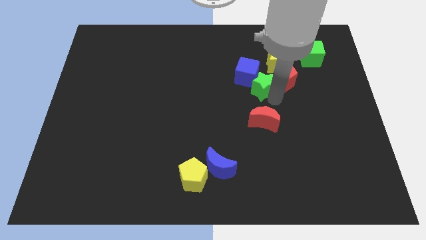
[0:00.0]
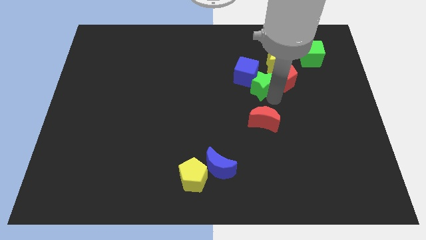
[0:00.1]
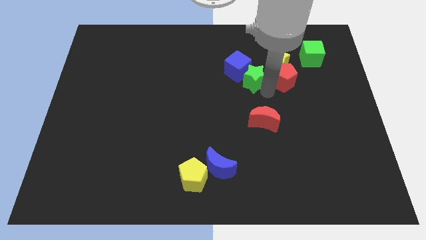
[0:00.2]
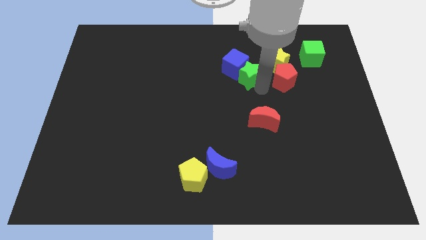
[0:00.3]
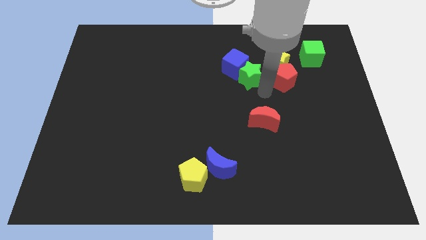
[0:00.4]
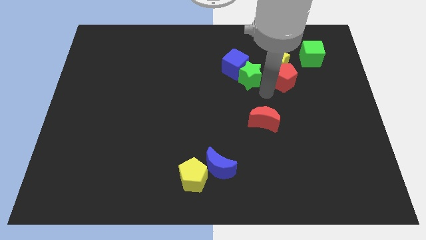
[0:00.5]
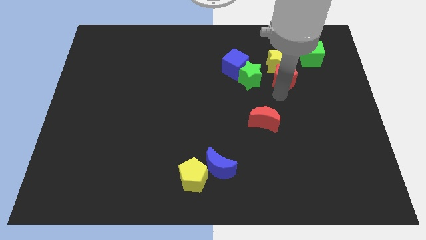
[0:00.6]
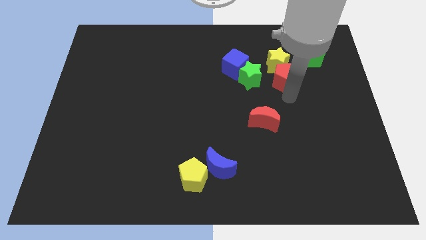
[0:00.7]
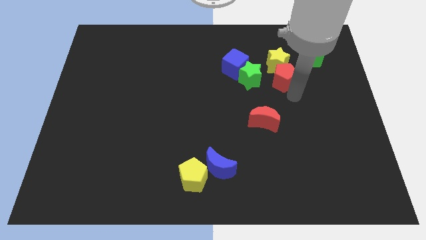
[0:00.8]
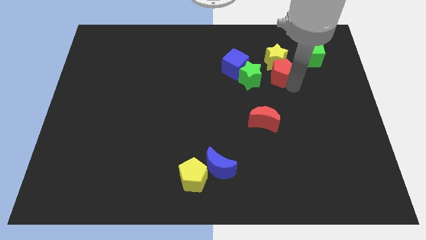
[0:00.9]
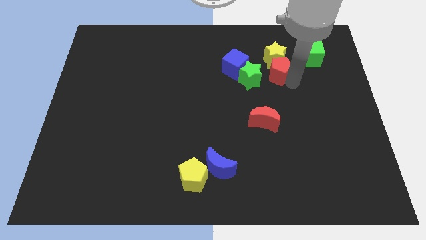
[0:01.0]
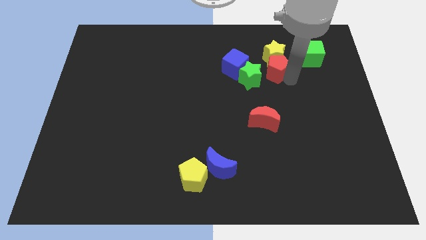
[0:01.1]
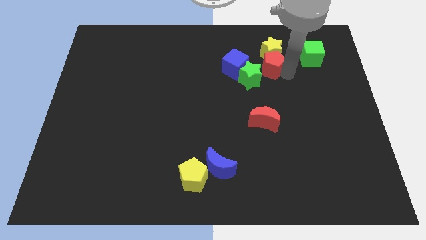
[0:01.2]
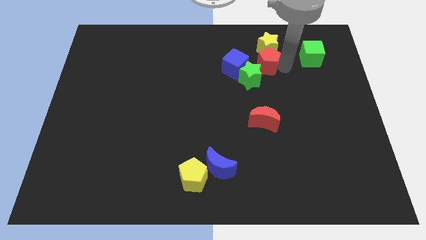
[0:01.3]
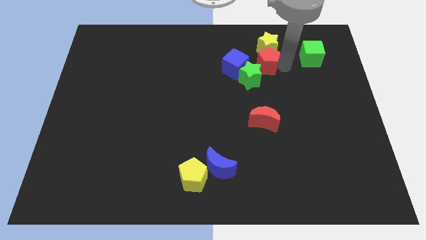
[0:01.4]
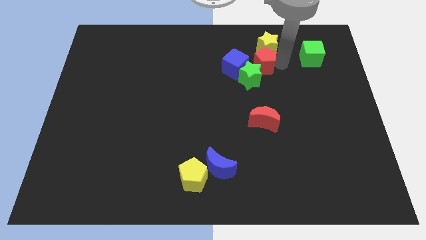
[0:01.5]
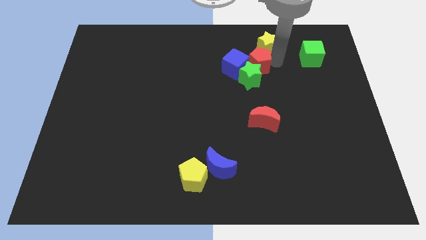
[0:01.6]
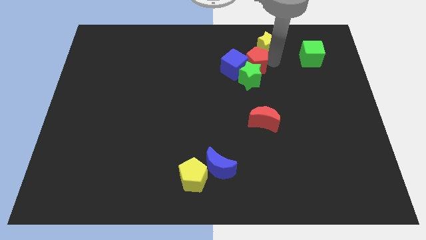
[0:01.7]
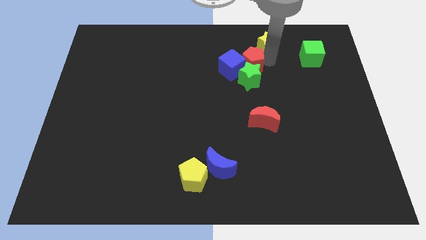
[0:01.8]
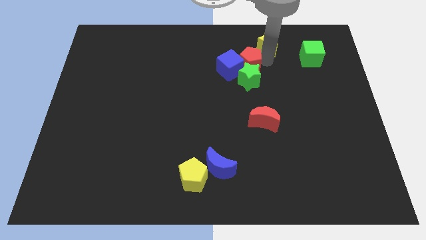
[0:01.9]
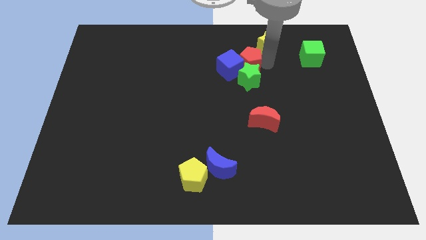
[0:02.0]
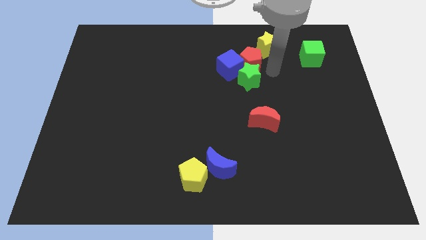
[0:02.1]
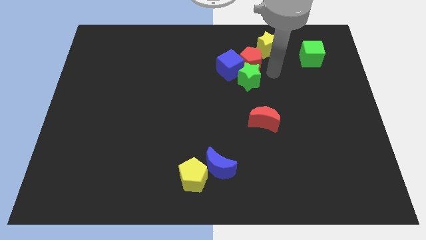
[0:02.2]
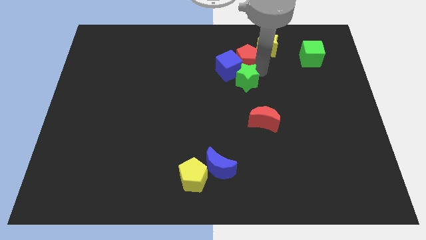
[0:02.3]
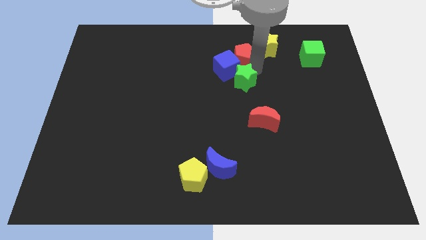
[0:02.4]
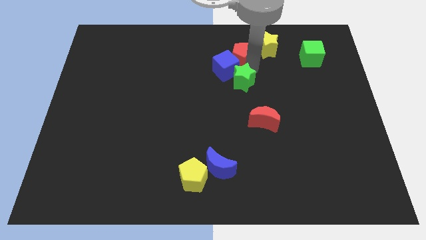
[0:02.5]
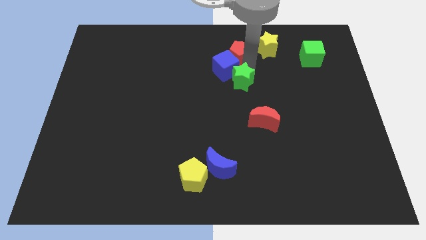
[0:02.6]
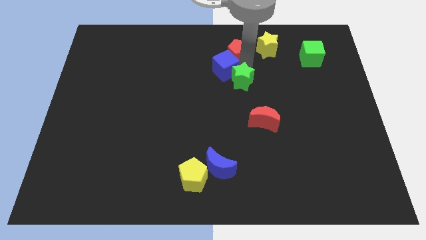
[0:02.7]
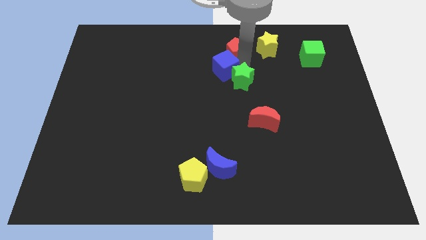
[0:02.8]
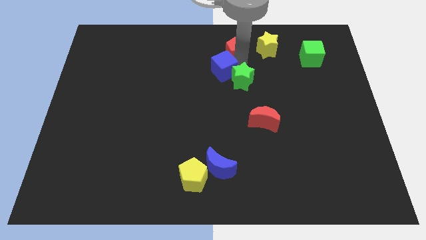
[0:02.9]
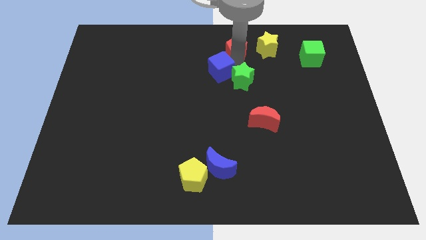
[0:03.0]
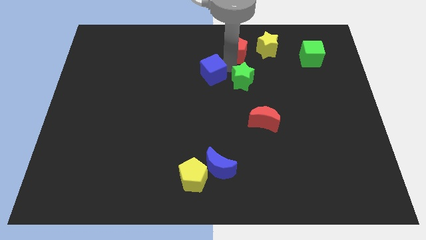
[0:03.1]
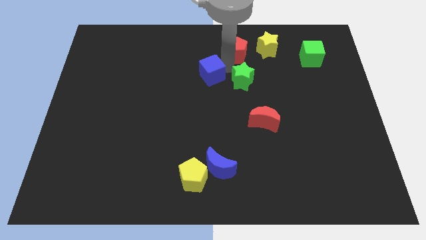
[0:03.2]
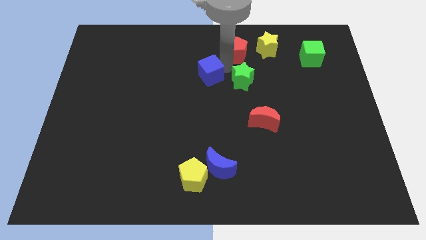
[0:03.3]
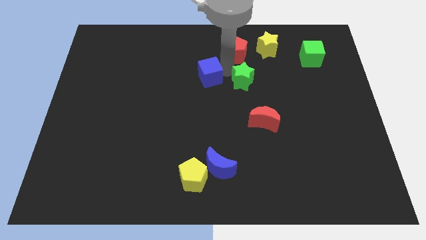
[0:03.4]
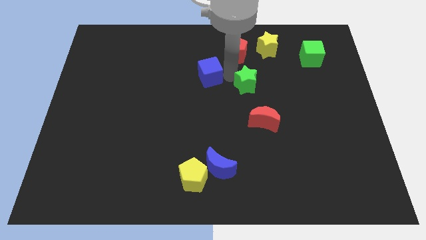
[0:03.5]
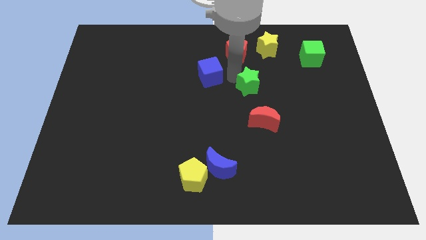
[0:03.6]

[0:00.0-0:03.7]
separate the blue cube and red pentagon

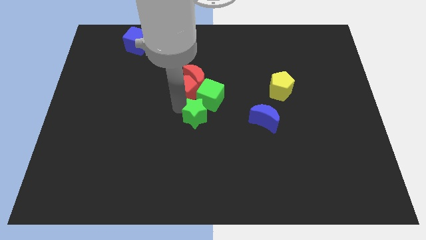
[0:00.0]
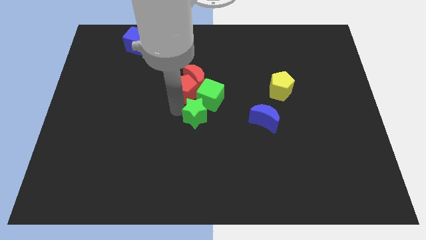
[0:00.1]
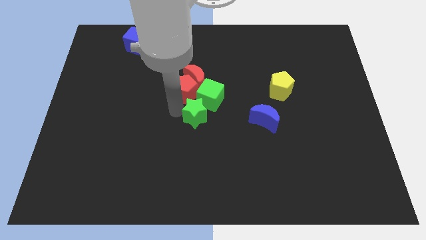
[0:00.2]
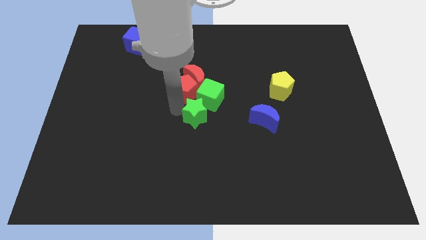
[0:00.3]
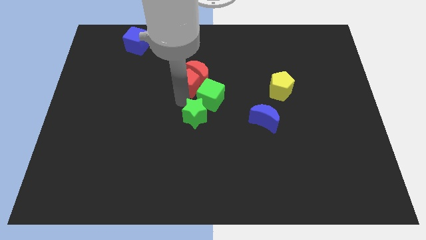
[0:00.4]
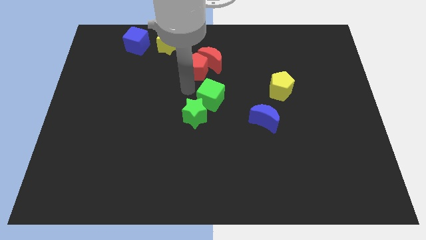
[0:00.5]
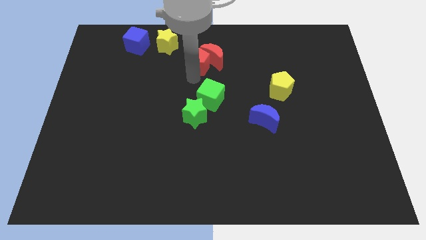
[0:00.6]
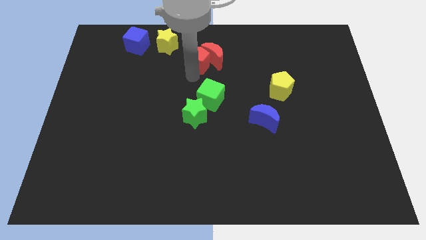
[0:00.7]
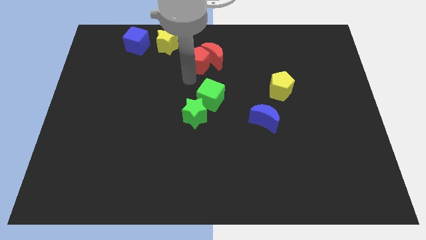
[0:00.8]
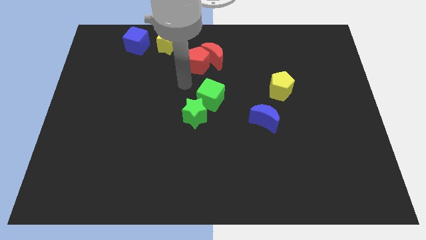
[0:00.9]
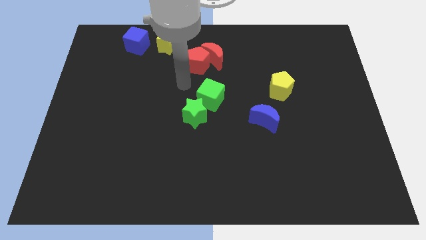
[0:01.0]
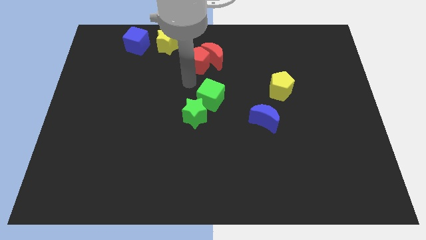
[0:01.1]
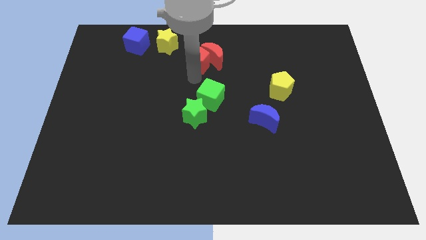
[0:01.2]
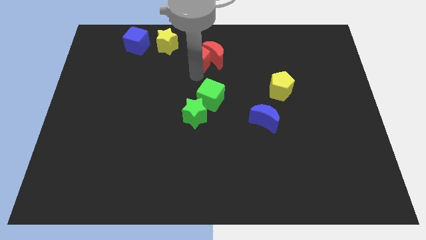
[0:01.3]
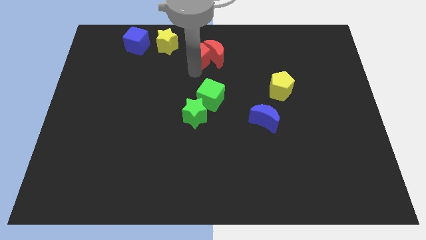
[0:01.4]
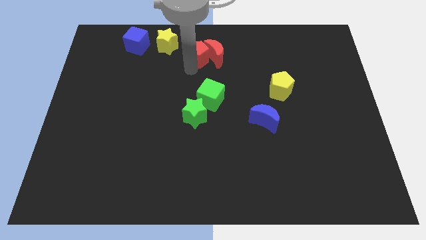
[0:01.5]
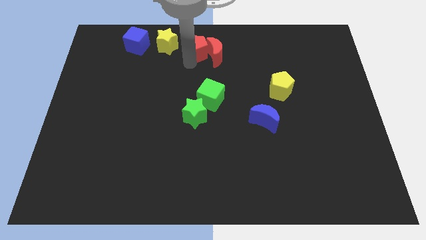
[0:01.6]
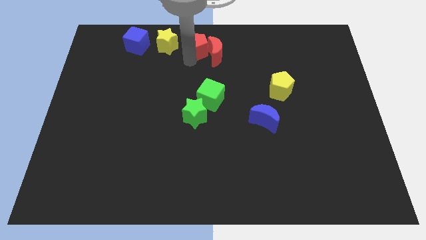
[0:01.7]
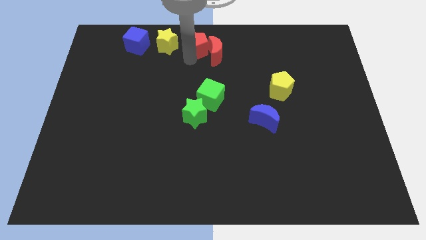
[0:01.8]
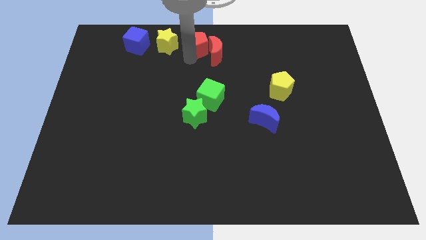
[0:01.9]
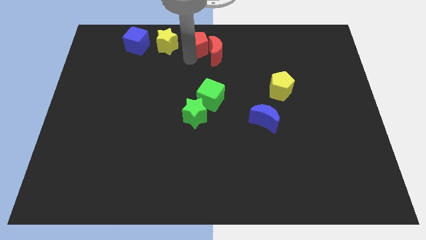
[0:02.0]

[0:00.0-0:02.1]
push the red pentagon along with red crescent towards the top center

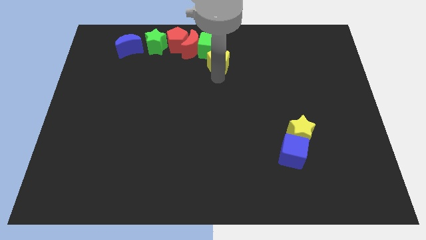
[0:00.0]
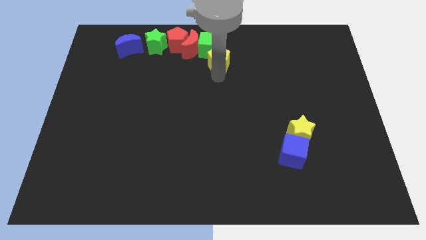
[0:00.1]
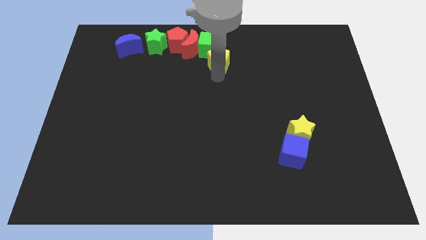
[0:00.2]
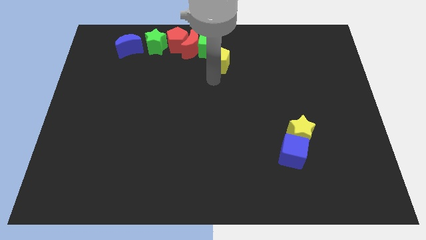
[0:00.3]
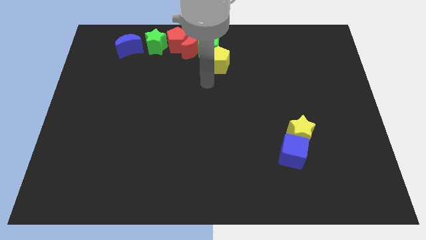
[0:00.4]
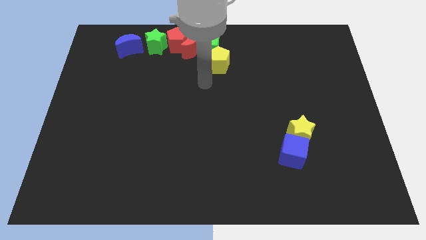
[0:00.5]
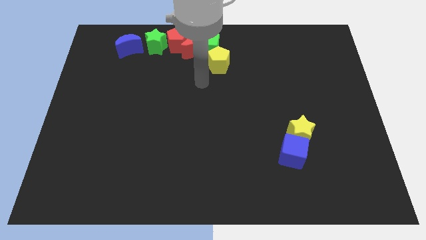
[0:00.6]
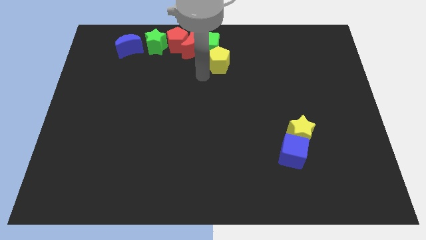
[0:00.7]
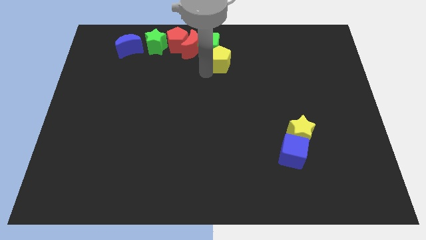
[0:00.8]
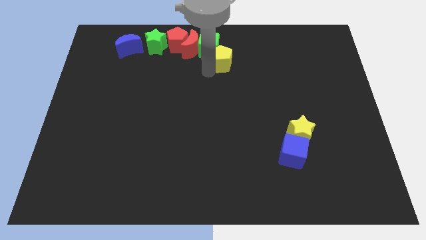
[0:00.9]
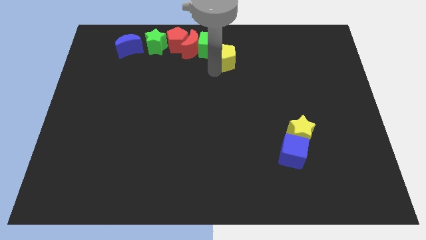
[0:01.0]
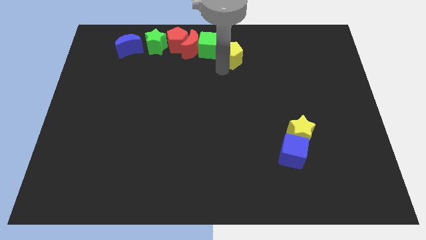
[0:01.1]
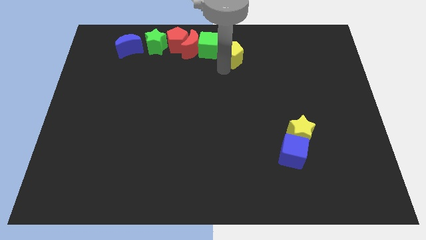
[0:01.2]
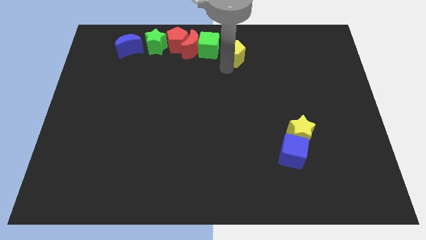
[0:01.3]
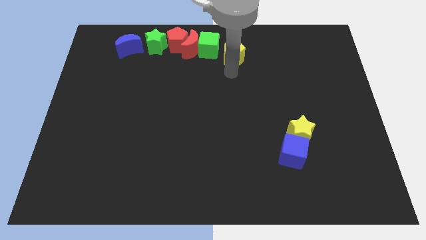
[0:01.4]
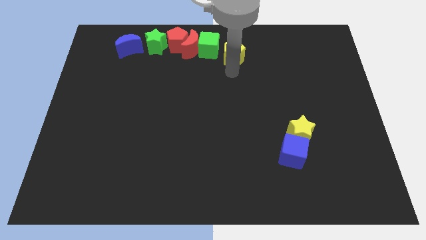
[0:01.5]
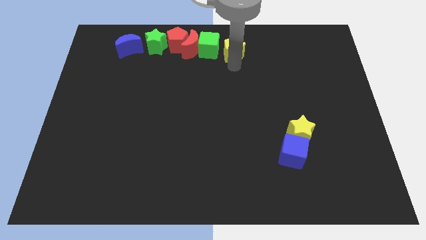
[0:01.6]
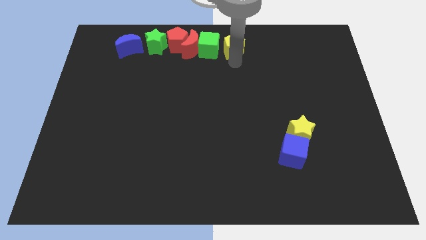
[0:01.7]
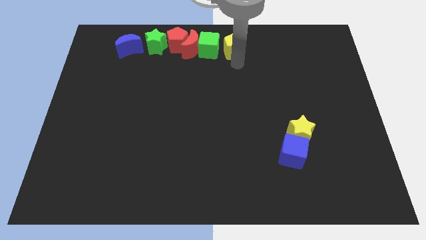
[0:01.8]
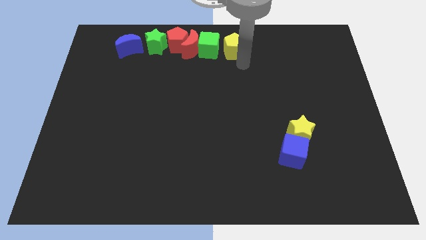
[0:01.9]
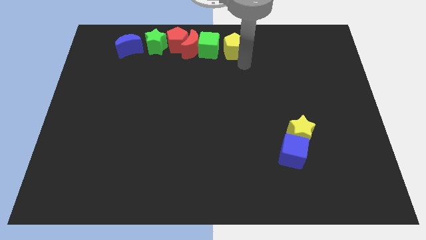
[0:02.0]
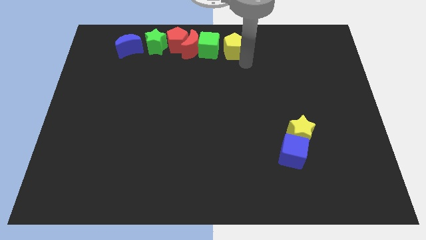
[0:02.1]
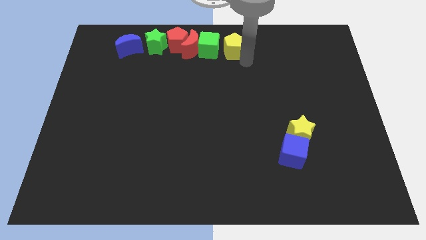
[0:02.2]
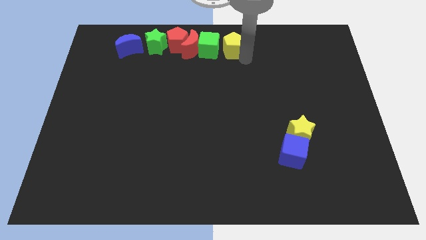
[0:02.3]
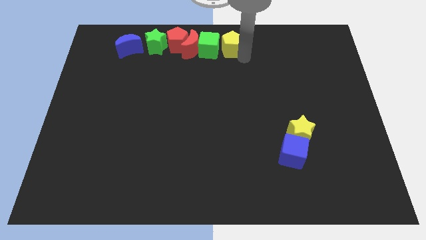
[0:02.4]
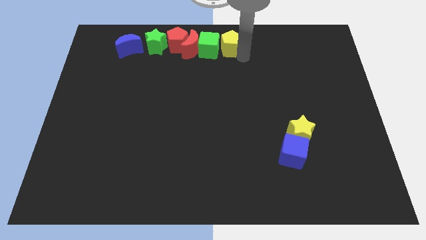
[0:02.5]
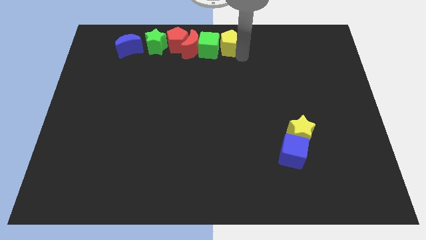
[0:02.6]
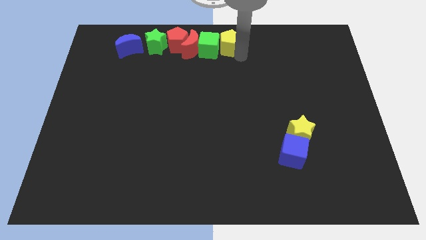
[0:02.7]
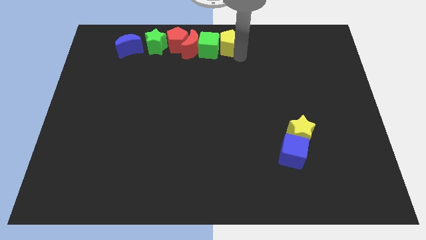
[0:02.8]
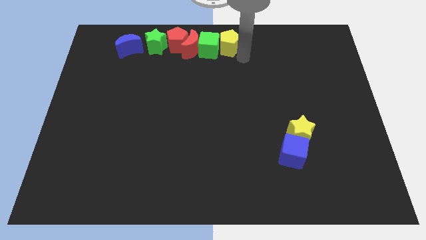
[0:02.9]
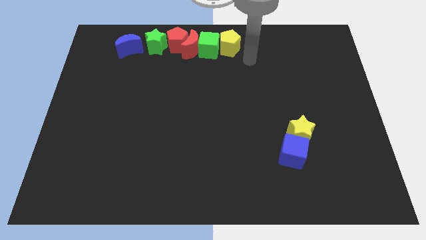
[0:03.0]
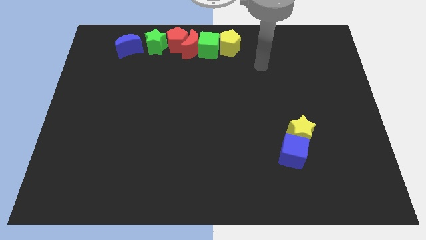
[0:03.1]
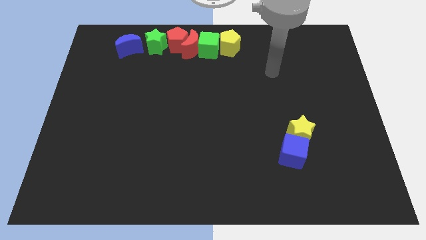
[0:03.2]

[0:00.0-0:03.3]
place the yellow pentagon at the right side of the green cube
